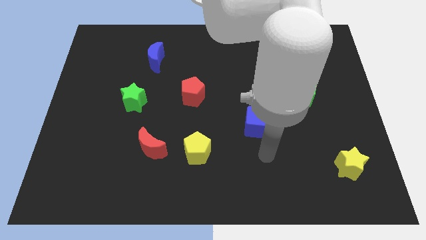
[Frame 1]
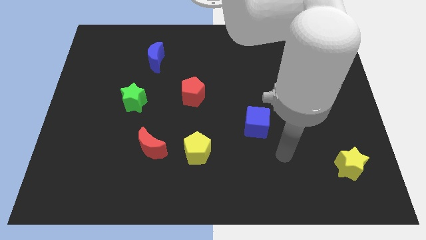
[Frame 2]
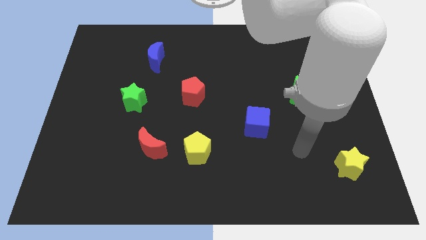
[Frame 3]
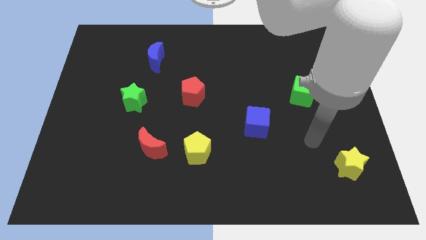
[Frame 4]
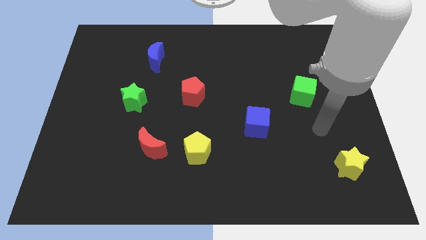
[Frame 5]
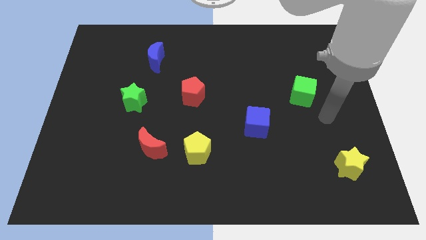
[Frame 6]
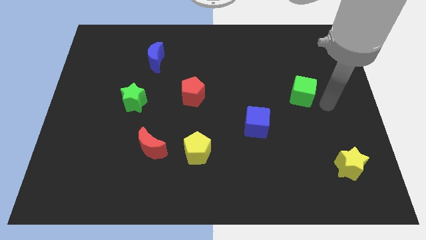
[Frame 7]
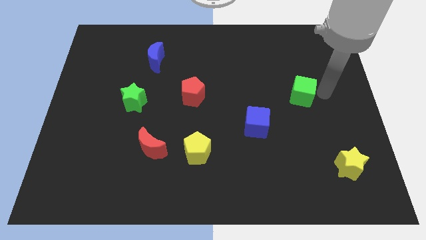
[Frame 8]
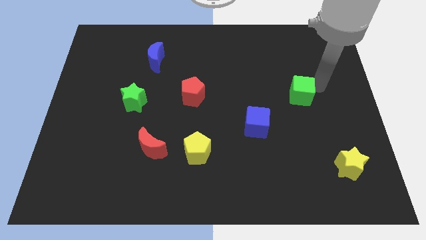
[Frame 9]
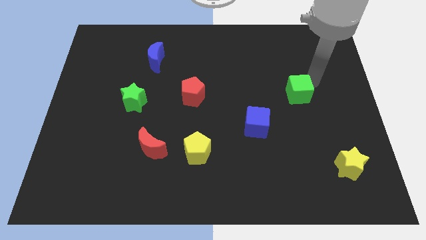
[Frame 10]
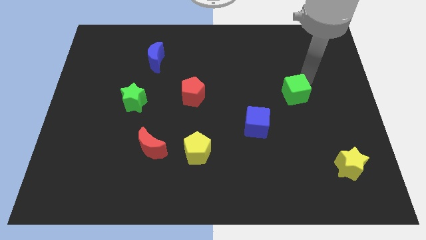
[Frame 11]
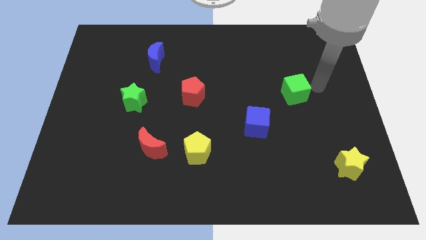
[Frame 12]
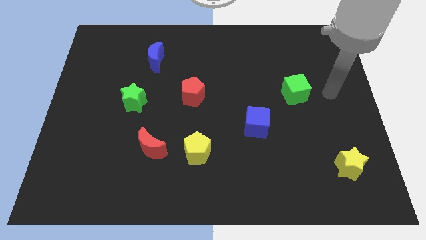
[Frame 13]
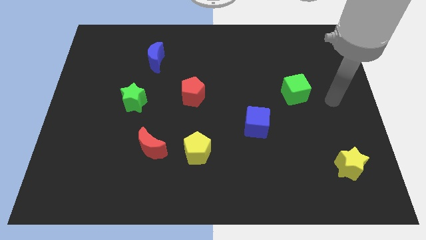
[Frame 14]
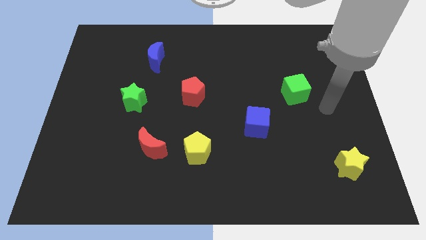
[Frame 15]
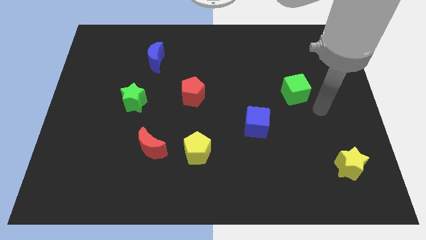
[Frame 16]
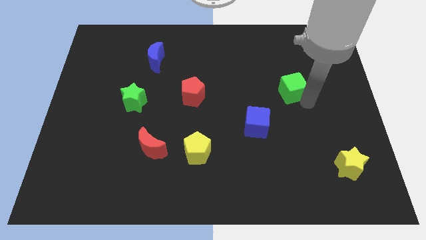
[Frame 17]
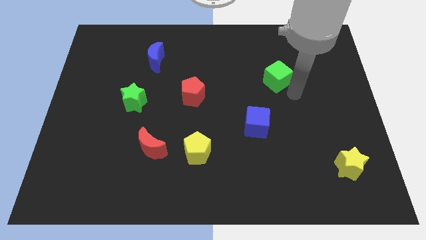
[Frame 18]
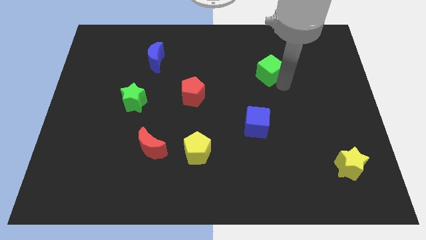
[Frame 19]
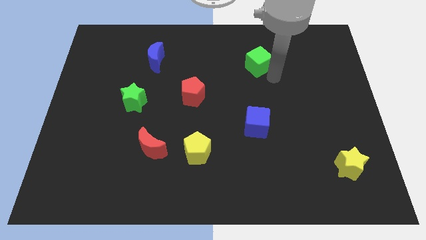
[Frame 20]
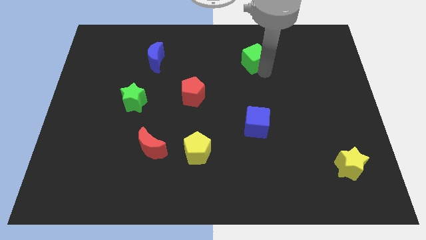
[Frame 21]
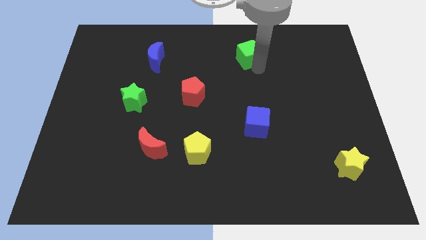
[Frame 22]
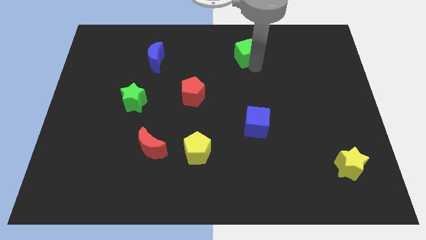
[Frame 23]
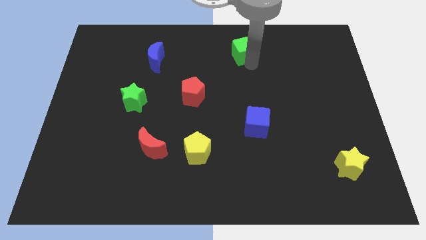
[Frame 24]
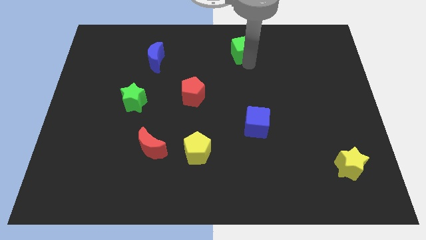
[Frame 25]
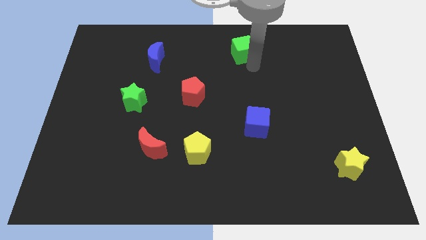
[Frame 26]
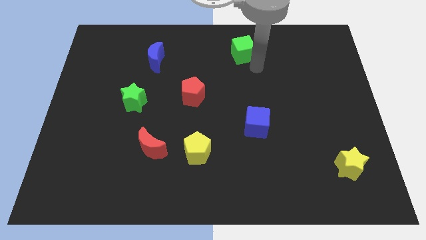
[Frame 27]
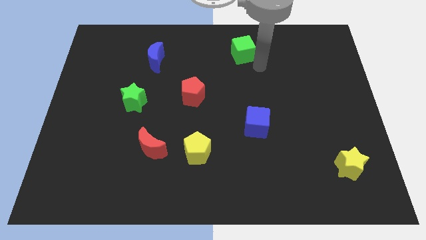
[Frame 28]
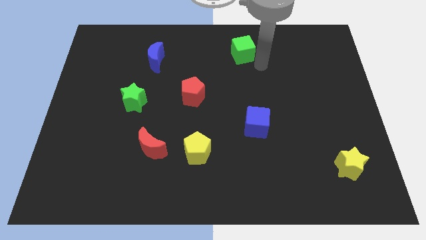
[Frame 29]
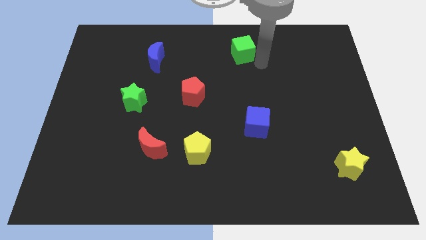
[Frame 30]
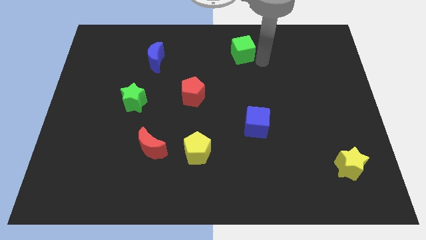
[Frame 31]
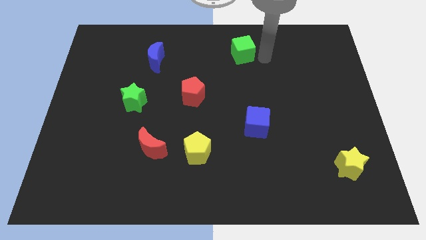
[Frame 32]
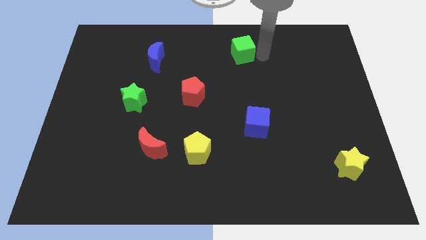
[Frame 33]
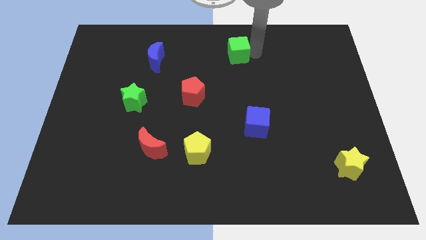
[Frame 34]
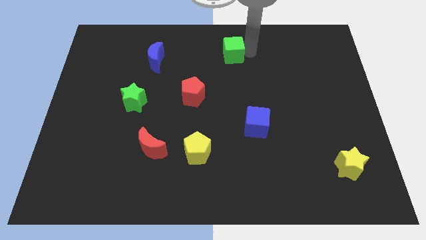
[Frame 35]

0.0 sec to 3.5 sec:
move the green cube towards the top center of the board

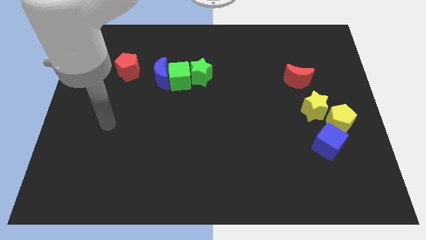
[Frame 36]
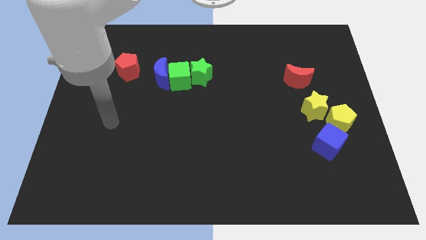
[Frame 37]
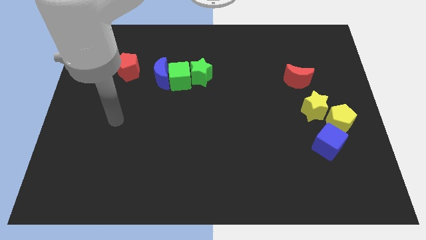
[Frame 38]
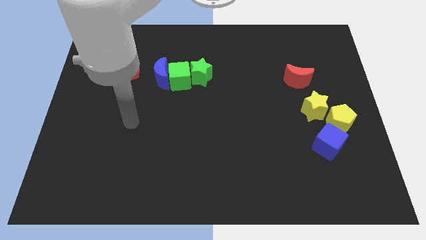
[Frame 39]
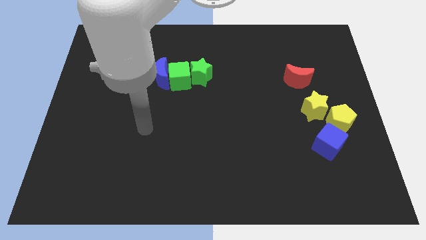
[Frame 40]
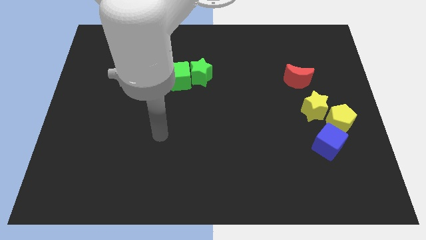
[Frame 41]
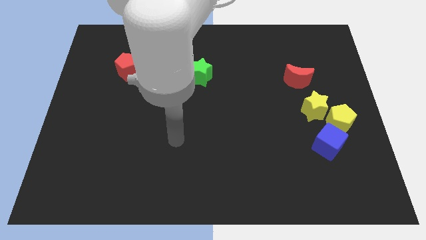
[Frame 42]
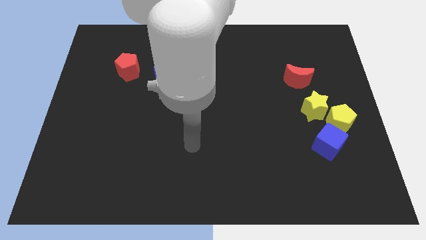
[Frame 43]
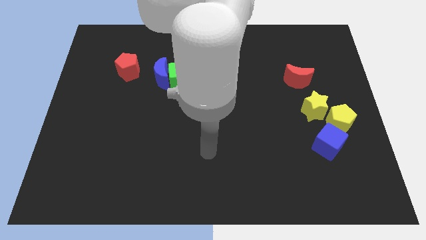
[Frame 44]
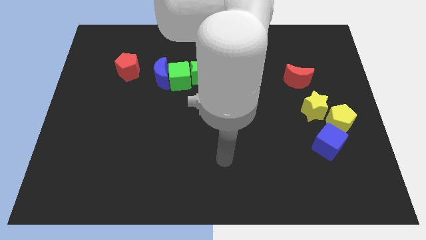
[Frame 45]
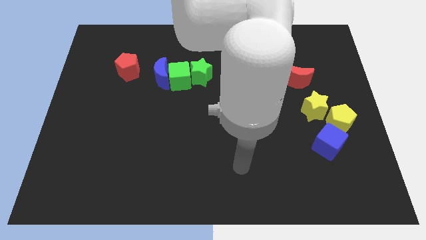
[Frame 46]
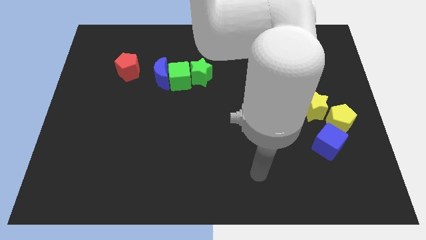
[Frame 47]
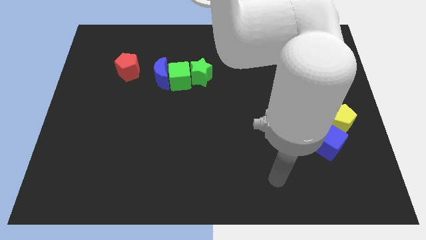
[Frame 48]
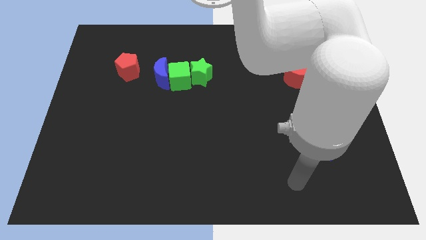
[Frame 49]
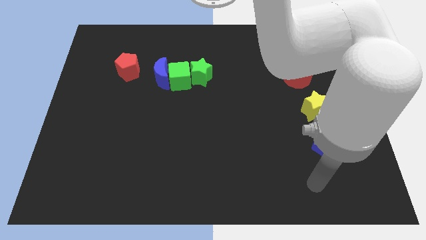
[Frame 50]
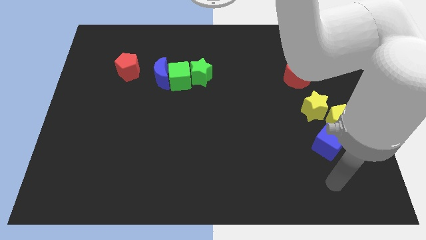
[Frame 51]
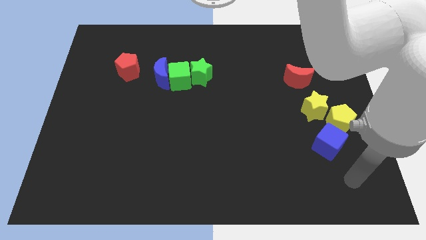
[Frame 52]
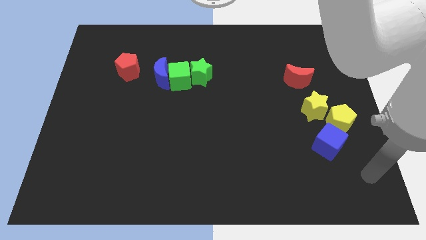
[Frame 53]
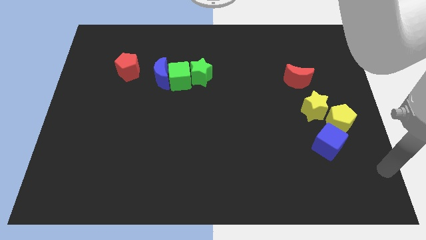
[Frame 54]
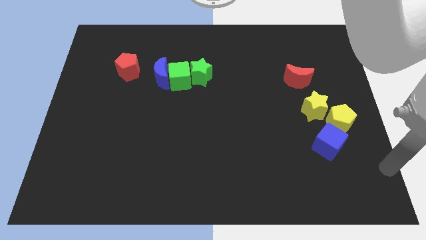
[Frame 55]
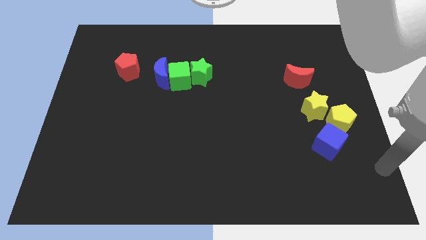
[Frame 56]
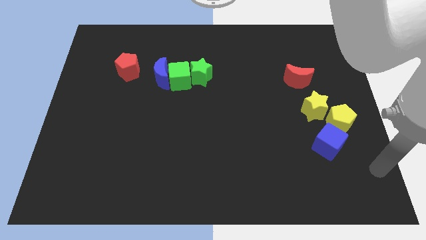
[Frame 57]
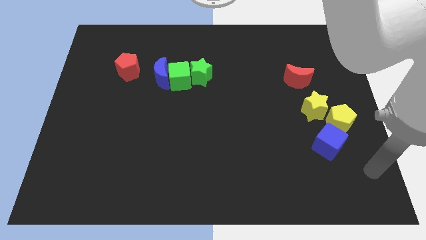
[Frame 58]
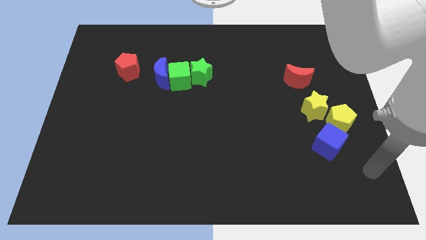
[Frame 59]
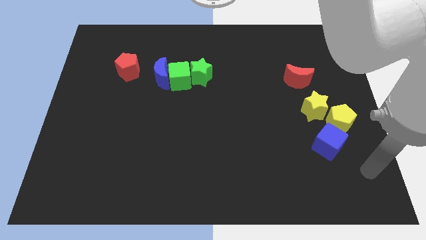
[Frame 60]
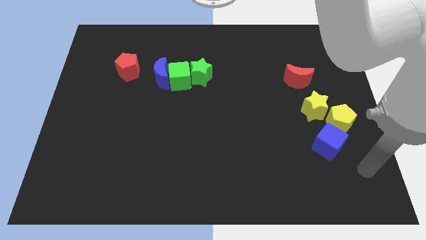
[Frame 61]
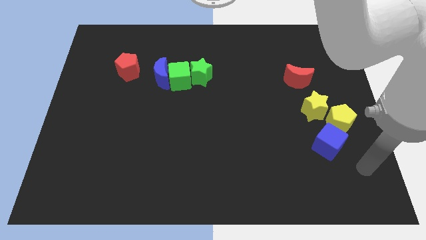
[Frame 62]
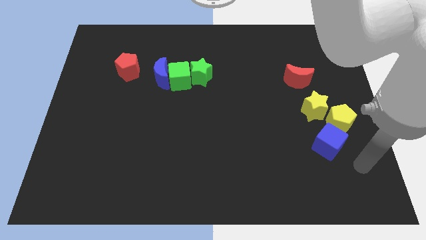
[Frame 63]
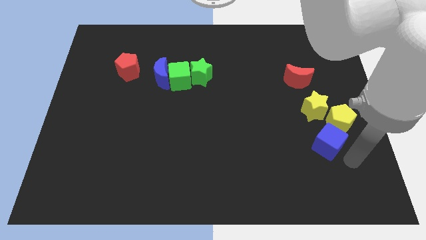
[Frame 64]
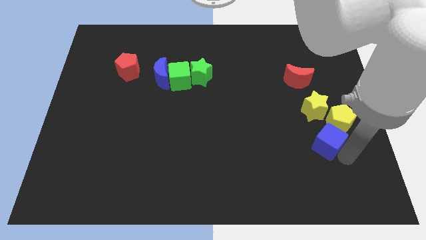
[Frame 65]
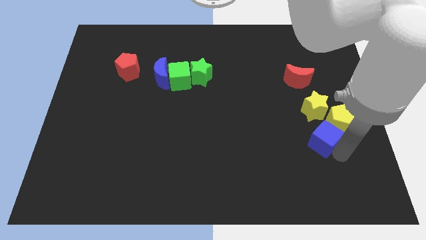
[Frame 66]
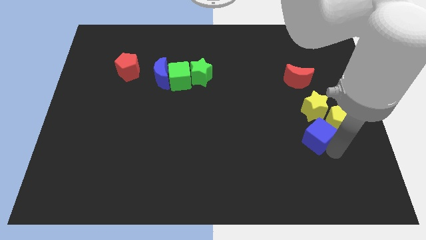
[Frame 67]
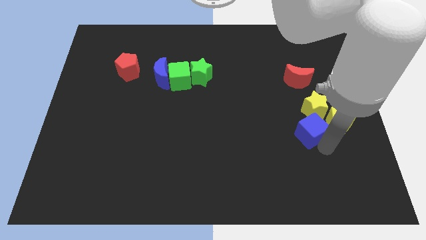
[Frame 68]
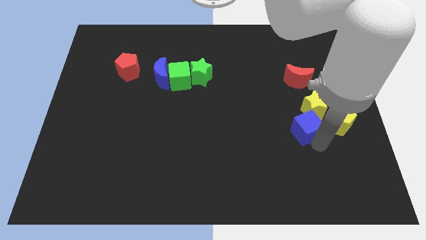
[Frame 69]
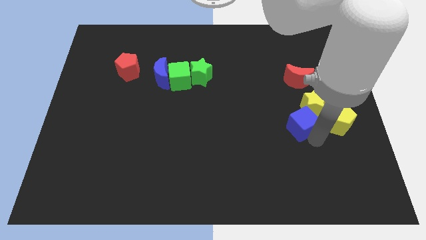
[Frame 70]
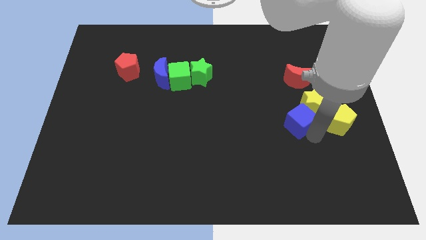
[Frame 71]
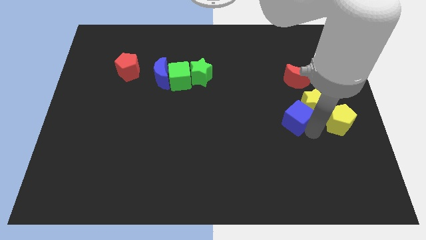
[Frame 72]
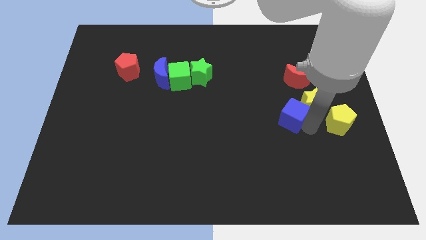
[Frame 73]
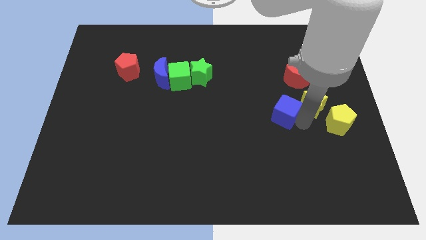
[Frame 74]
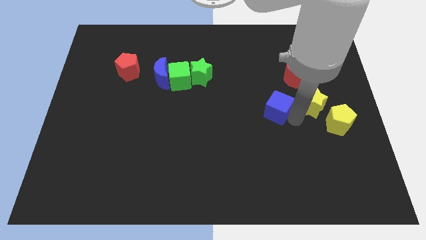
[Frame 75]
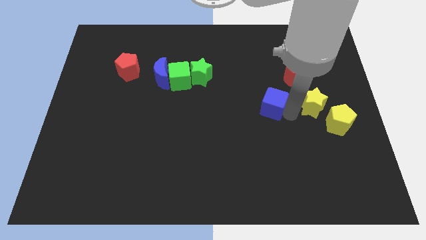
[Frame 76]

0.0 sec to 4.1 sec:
move blue cube left of yellow star

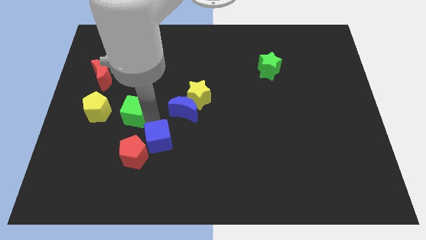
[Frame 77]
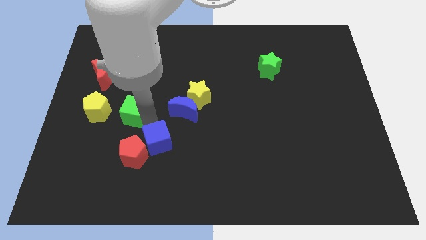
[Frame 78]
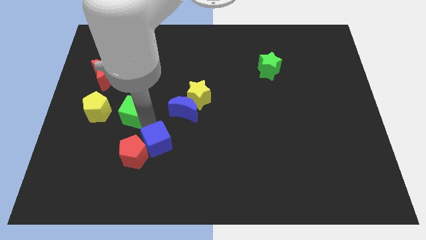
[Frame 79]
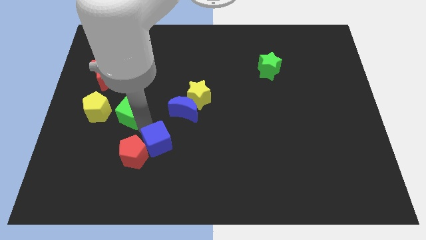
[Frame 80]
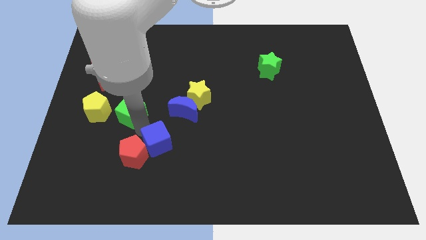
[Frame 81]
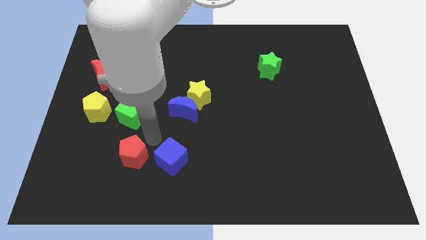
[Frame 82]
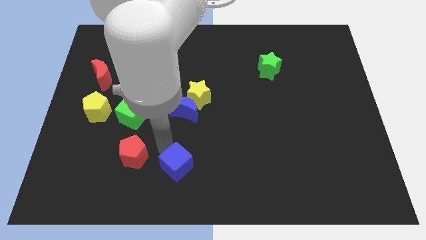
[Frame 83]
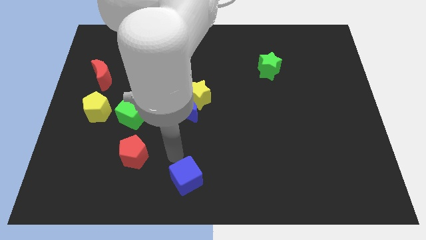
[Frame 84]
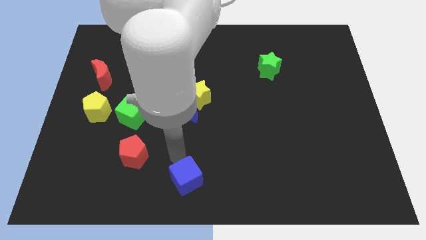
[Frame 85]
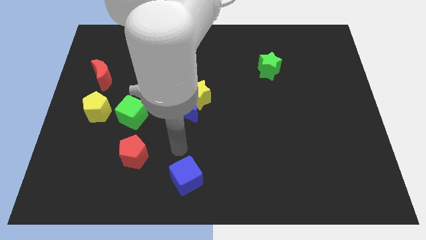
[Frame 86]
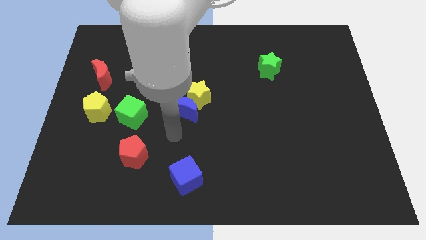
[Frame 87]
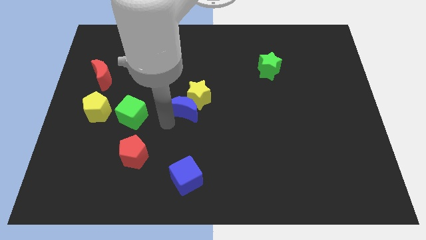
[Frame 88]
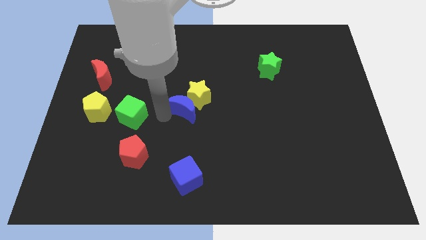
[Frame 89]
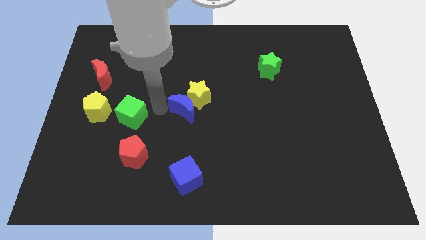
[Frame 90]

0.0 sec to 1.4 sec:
drag the blue cube slightly downwards
